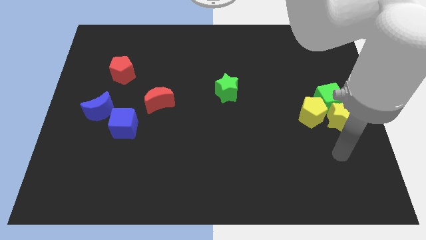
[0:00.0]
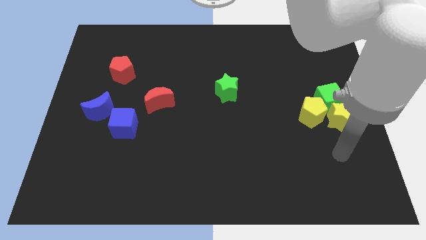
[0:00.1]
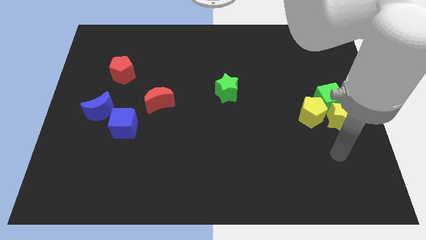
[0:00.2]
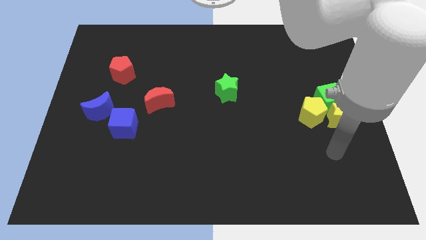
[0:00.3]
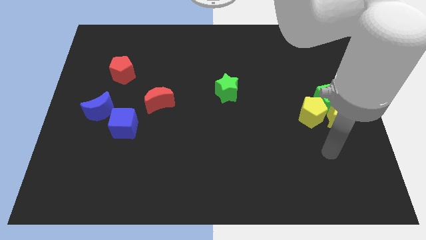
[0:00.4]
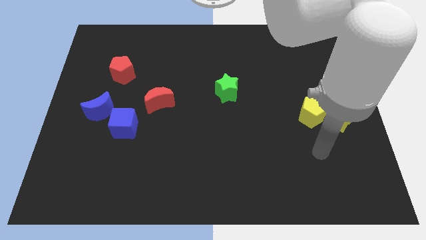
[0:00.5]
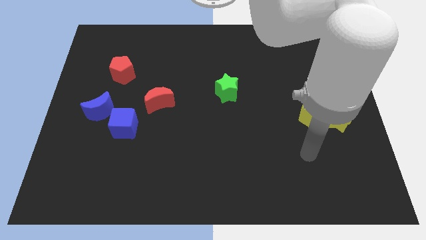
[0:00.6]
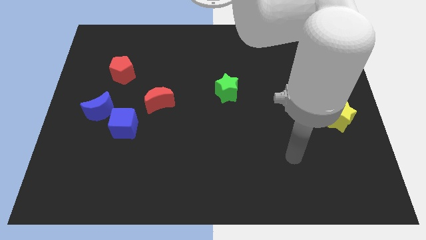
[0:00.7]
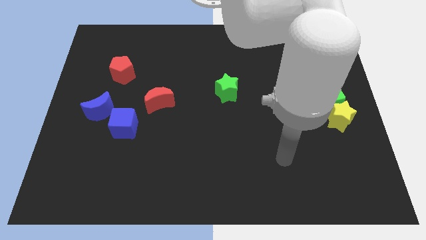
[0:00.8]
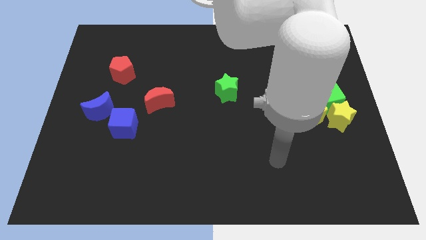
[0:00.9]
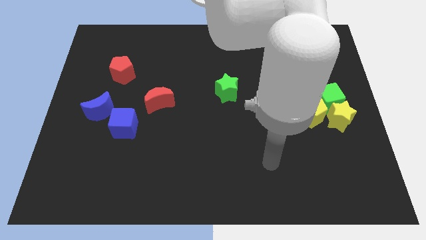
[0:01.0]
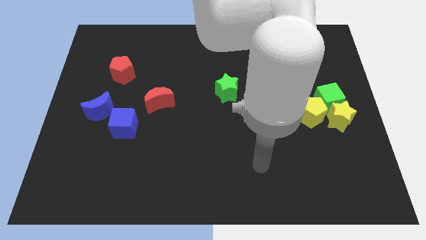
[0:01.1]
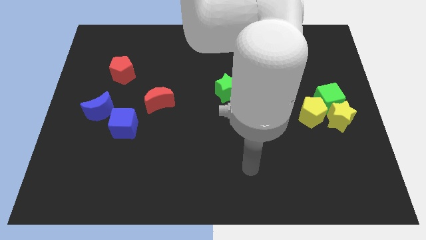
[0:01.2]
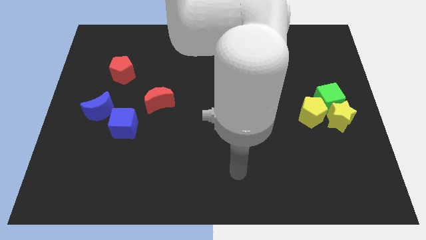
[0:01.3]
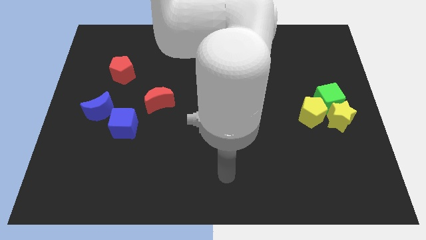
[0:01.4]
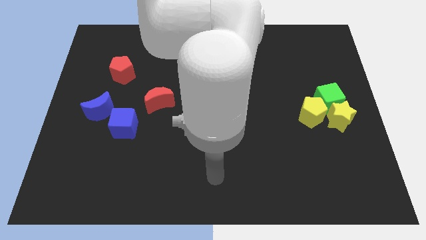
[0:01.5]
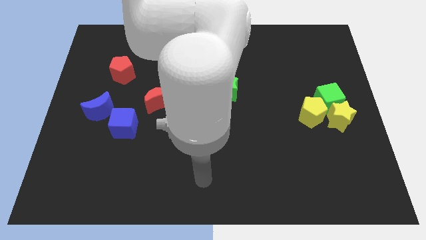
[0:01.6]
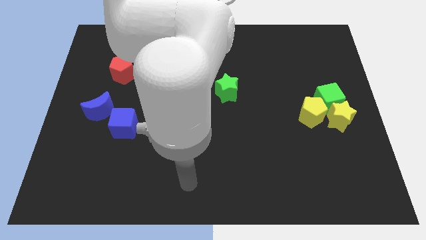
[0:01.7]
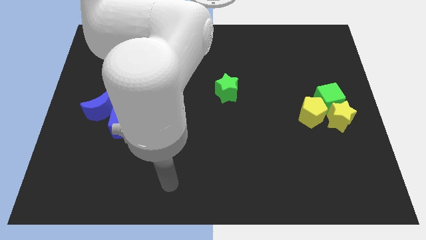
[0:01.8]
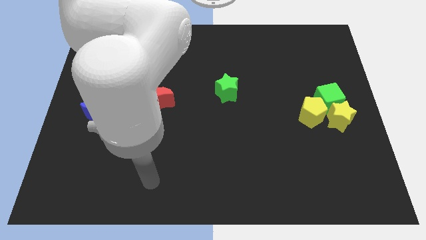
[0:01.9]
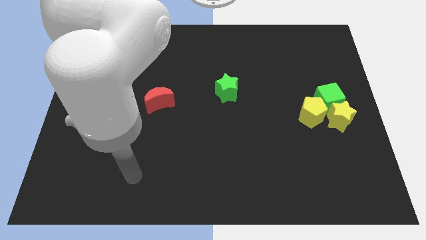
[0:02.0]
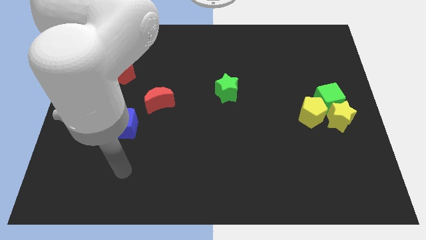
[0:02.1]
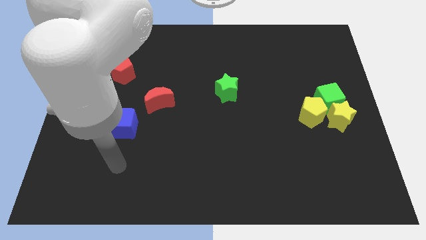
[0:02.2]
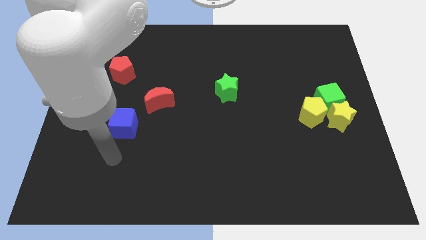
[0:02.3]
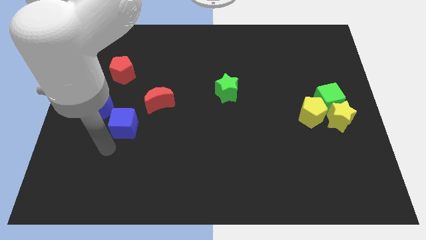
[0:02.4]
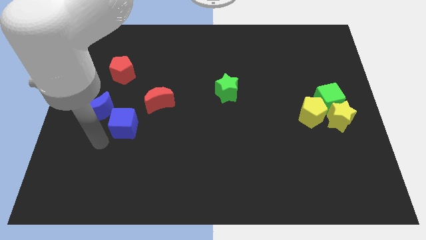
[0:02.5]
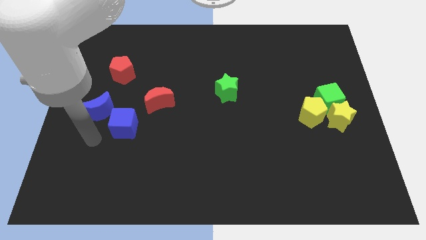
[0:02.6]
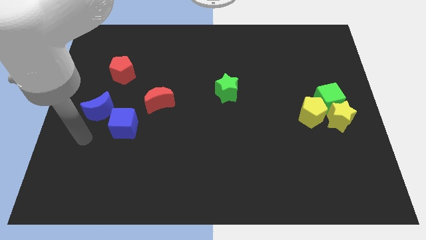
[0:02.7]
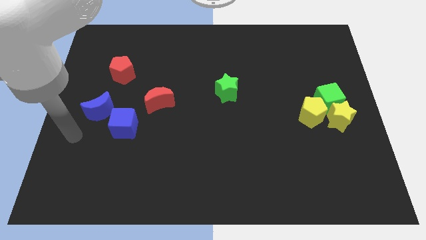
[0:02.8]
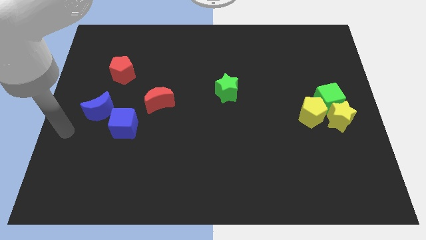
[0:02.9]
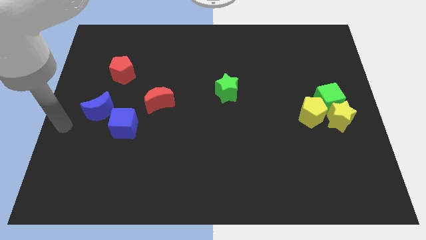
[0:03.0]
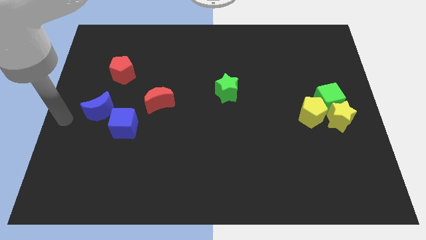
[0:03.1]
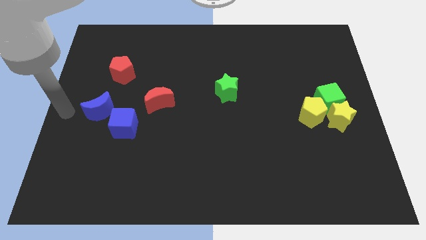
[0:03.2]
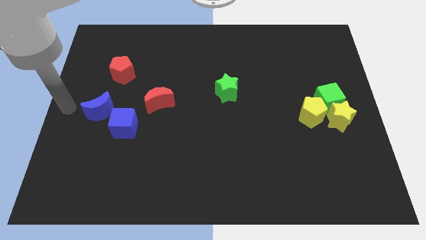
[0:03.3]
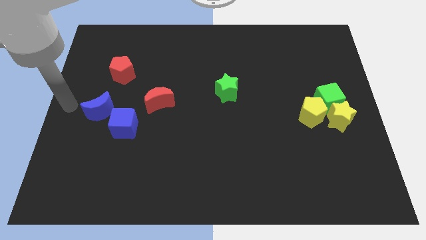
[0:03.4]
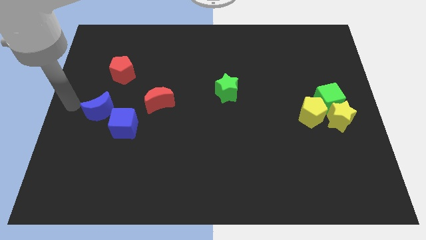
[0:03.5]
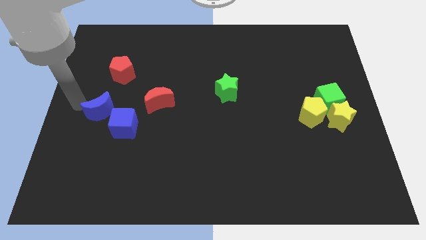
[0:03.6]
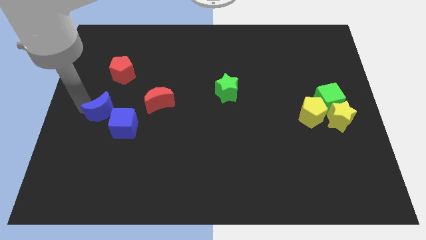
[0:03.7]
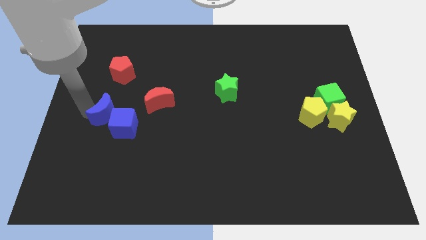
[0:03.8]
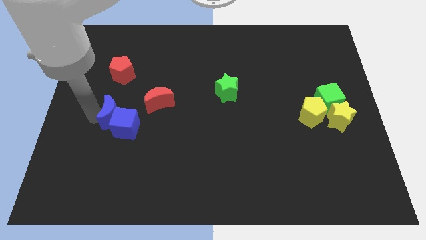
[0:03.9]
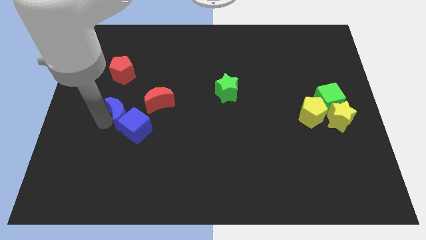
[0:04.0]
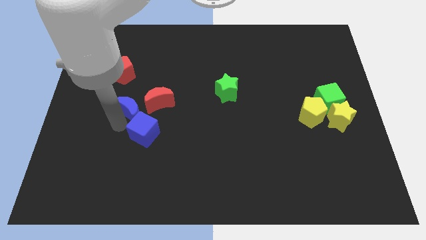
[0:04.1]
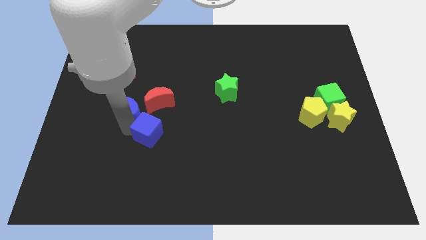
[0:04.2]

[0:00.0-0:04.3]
slightly push the blue moon into a blue cube

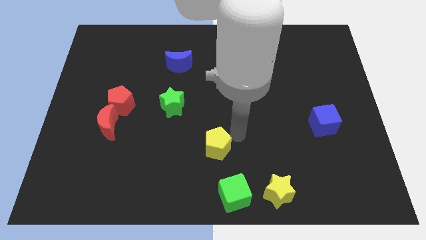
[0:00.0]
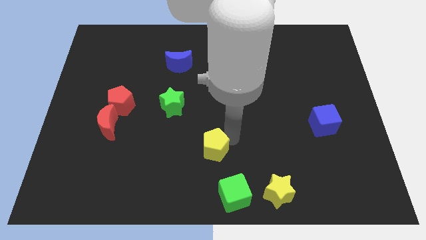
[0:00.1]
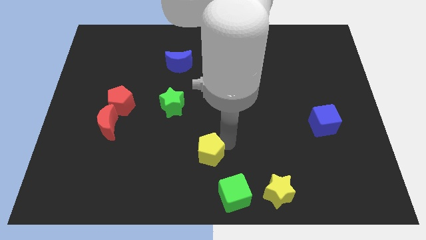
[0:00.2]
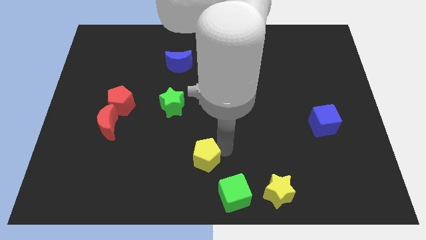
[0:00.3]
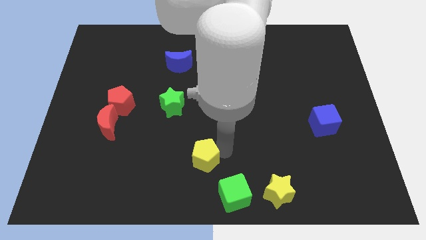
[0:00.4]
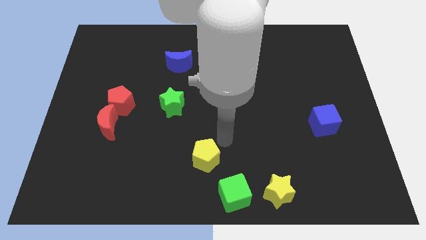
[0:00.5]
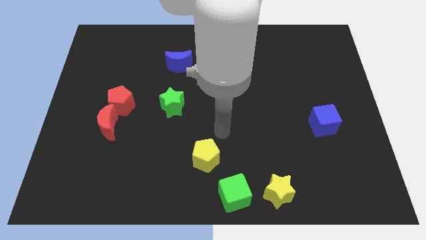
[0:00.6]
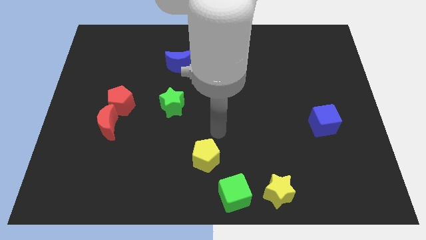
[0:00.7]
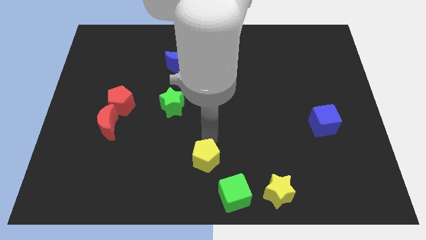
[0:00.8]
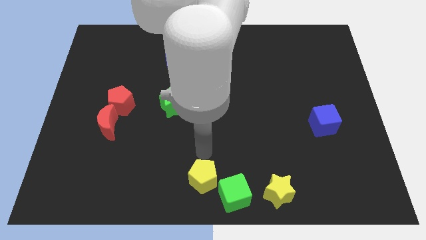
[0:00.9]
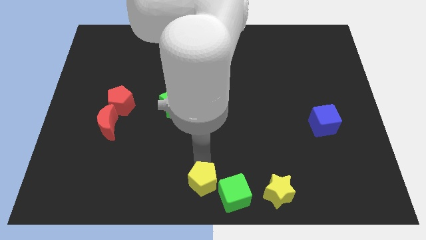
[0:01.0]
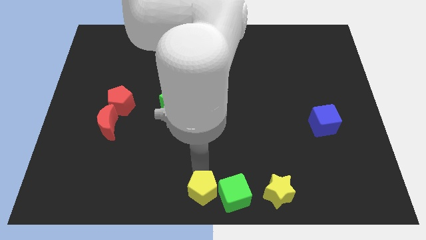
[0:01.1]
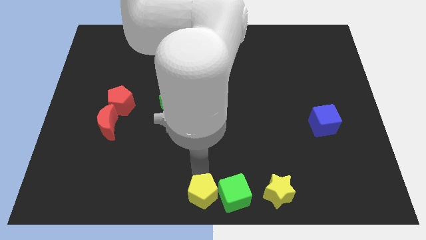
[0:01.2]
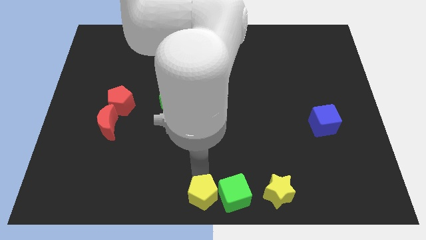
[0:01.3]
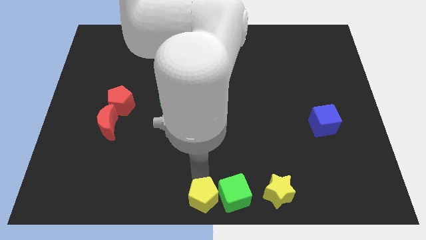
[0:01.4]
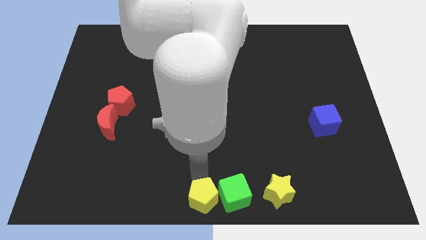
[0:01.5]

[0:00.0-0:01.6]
push the yellow pentagon to the left side of green cube

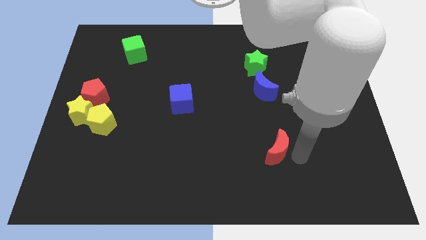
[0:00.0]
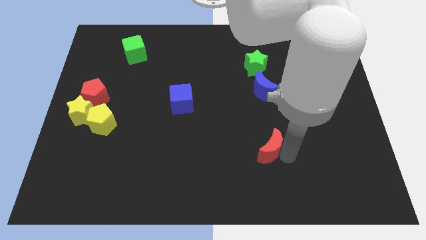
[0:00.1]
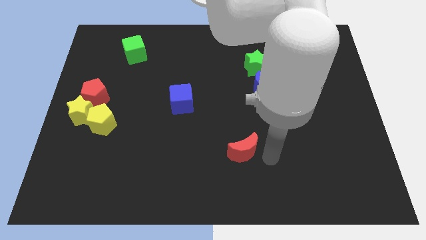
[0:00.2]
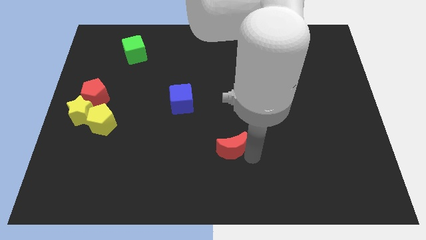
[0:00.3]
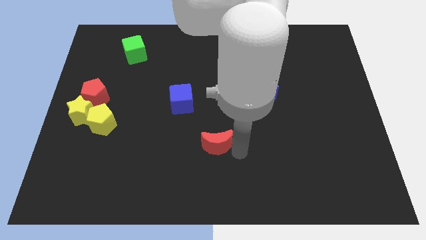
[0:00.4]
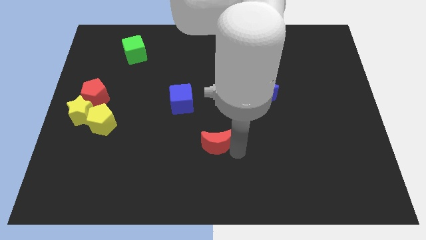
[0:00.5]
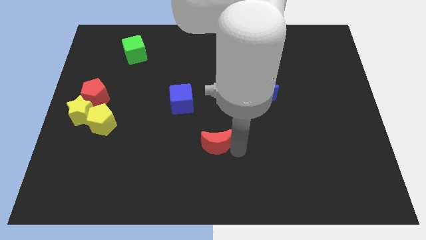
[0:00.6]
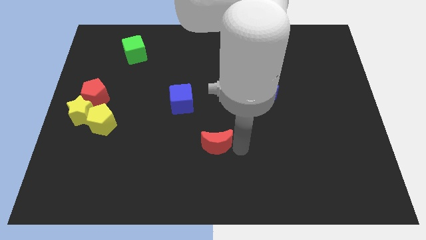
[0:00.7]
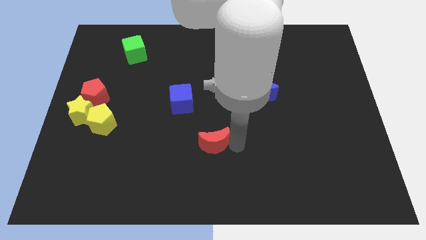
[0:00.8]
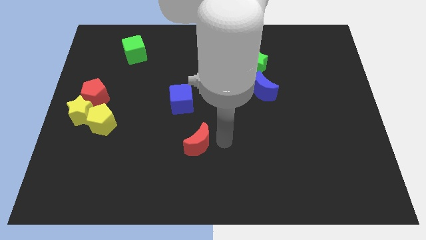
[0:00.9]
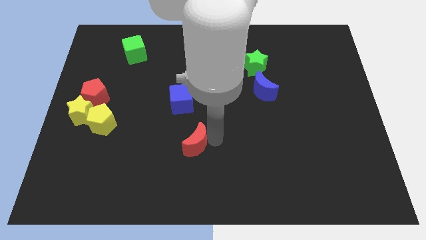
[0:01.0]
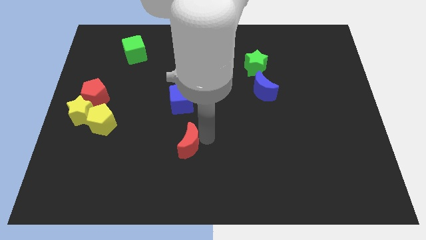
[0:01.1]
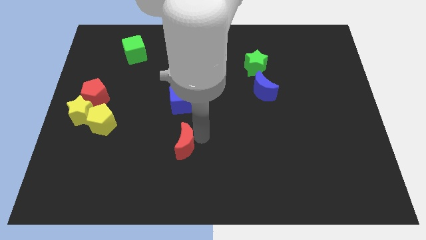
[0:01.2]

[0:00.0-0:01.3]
place red crescent below blue cube

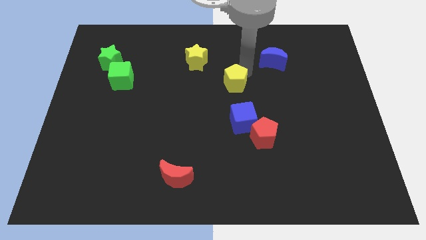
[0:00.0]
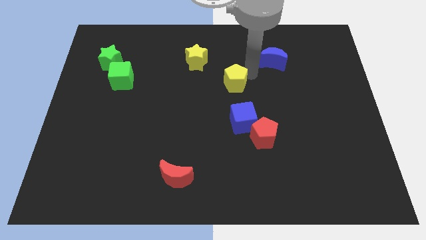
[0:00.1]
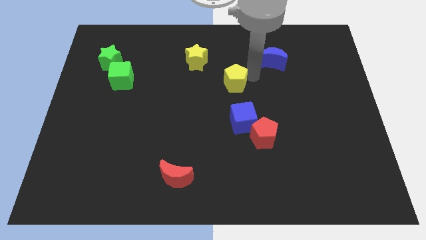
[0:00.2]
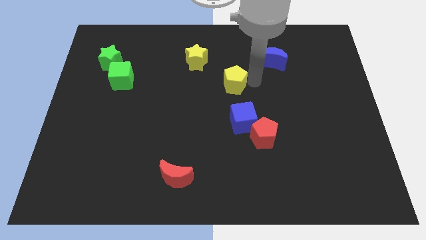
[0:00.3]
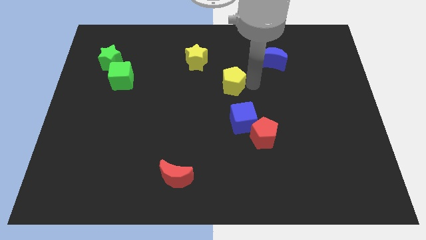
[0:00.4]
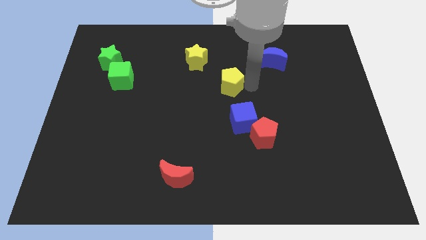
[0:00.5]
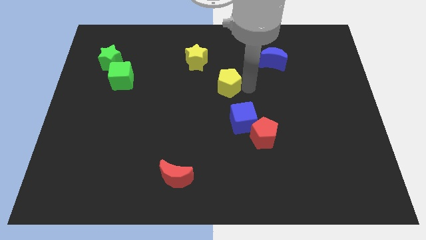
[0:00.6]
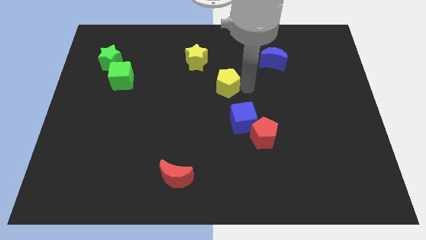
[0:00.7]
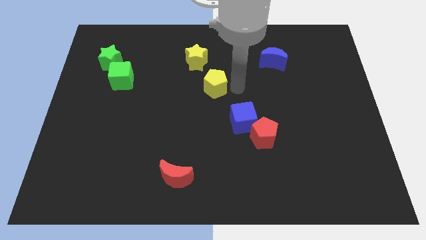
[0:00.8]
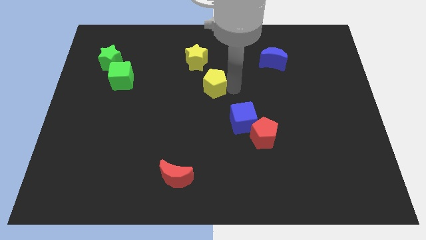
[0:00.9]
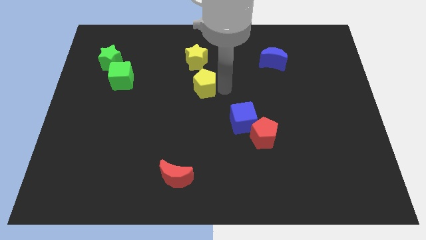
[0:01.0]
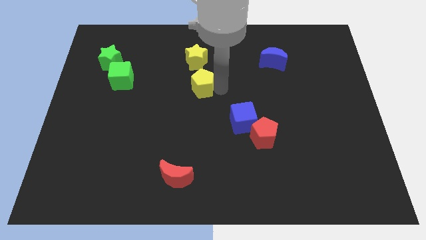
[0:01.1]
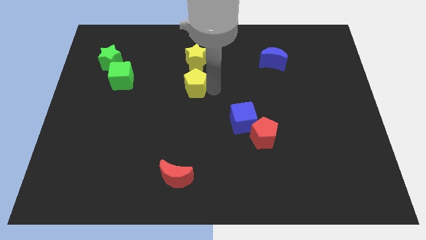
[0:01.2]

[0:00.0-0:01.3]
put the yellow pentagon below the yellow star

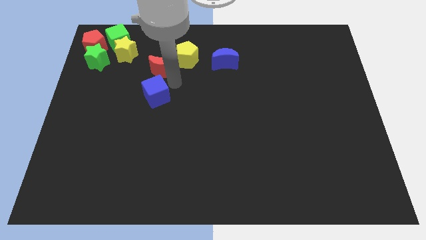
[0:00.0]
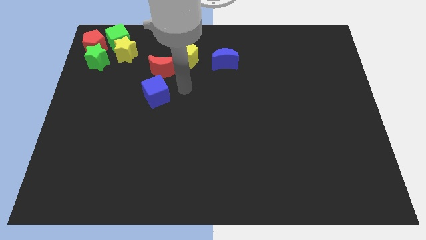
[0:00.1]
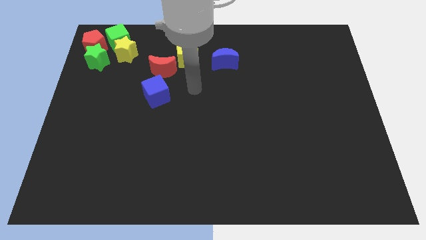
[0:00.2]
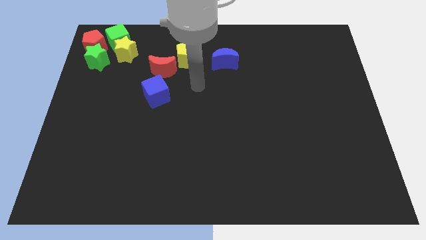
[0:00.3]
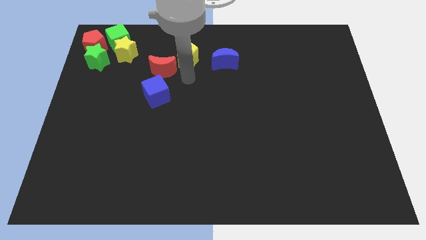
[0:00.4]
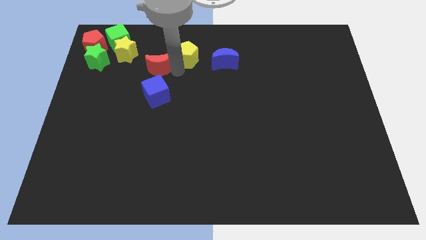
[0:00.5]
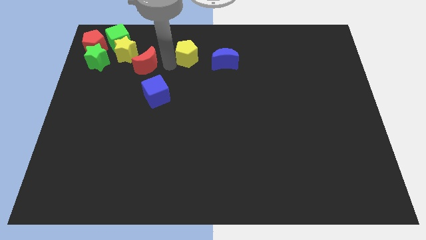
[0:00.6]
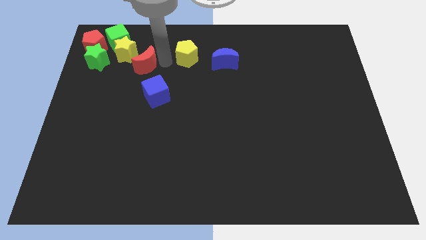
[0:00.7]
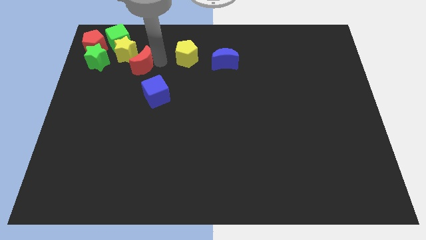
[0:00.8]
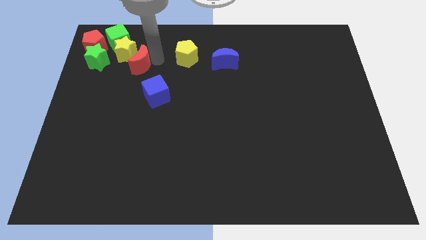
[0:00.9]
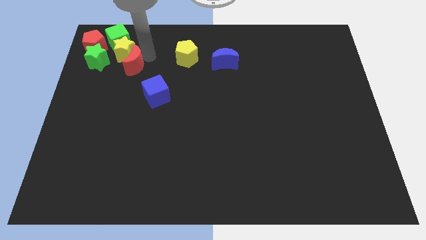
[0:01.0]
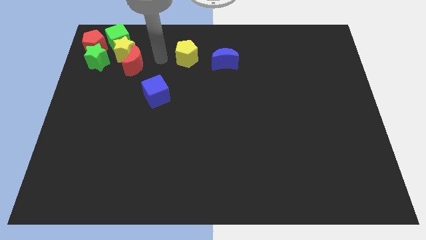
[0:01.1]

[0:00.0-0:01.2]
push the red crescent to the bottom right side of the yellow star on the board
